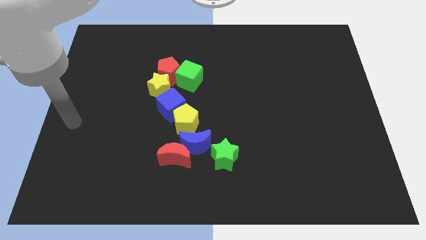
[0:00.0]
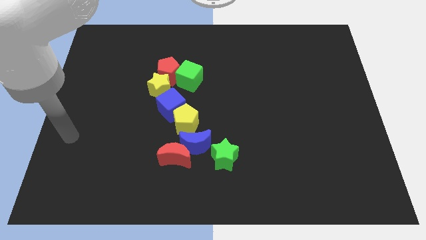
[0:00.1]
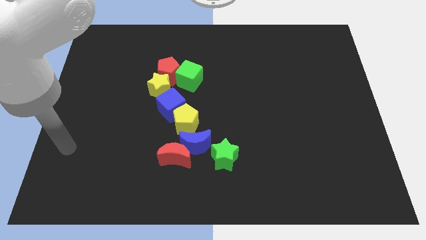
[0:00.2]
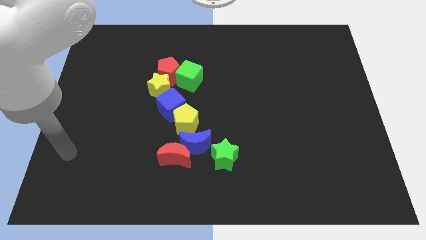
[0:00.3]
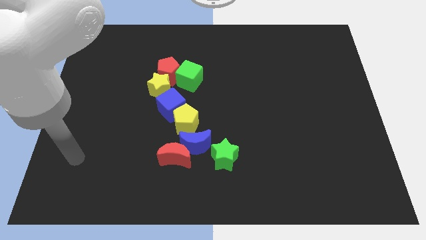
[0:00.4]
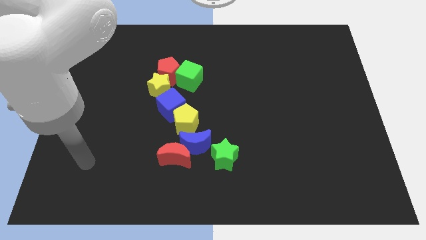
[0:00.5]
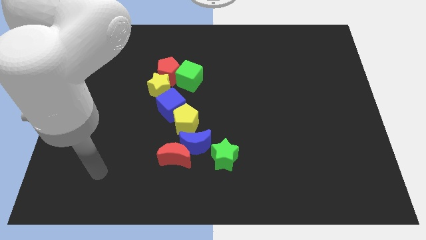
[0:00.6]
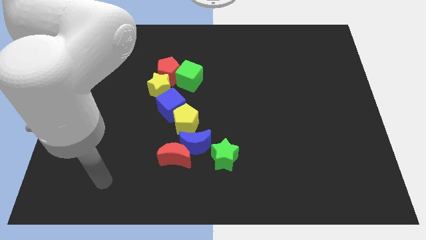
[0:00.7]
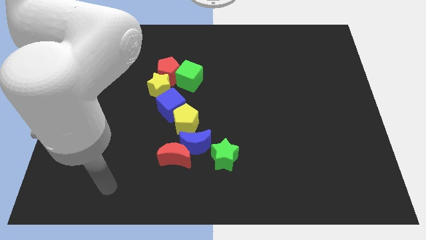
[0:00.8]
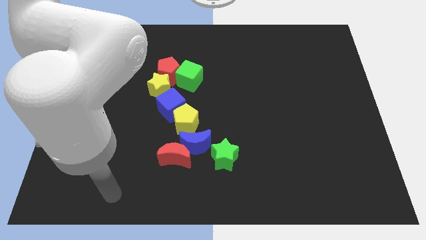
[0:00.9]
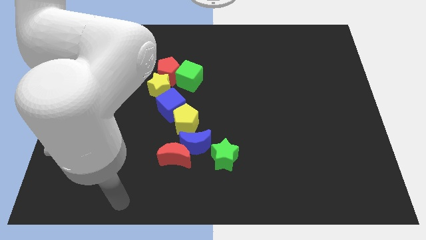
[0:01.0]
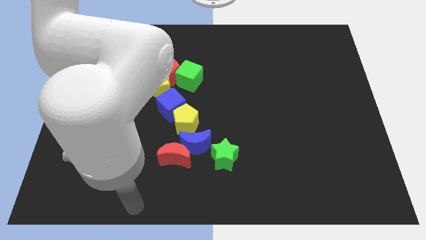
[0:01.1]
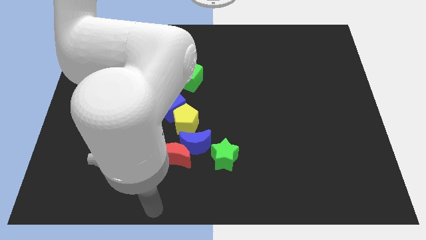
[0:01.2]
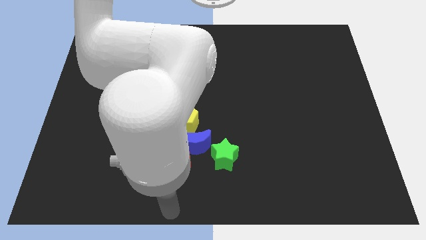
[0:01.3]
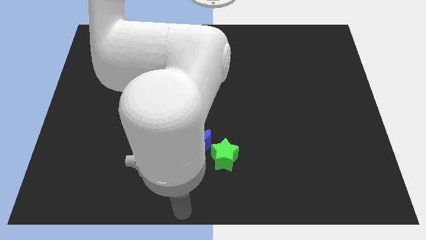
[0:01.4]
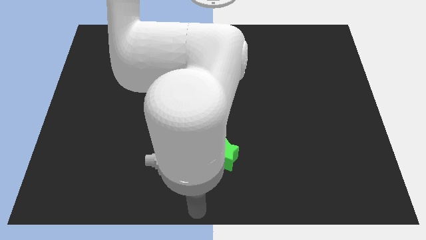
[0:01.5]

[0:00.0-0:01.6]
move your arm towards the bottom center of the board

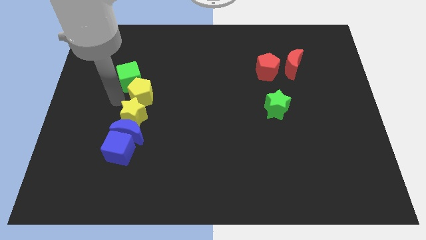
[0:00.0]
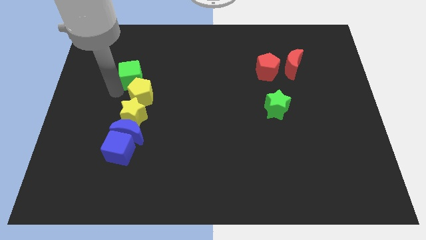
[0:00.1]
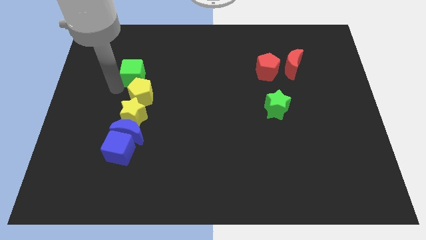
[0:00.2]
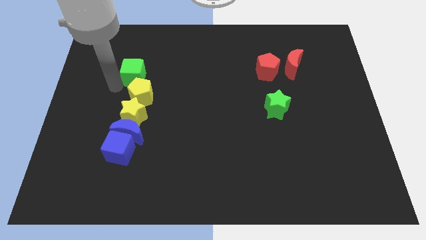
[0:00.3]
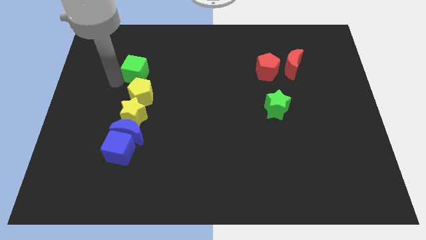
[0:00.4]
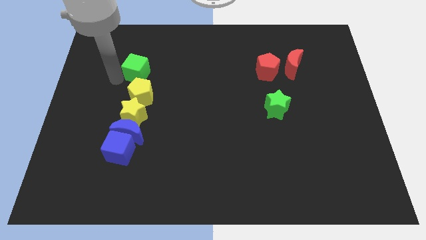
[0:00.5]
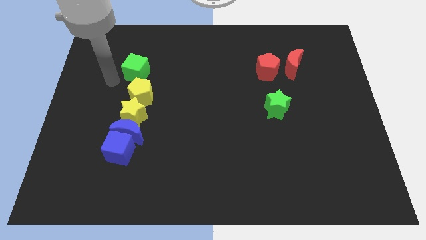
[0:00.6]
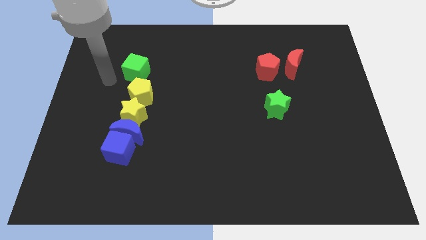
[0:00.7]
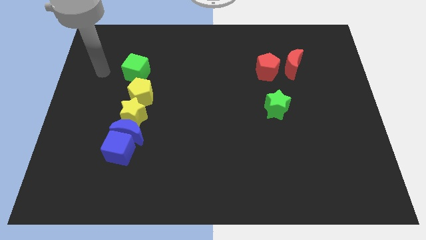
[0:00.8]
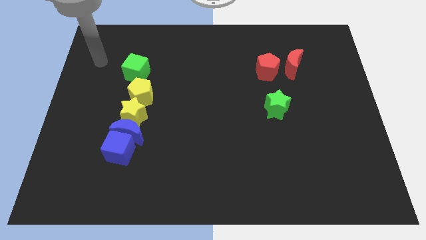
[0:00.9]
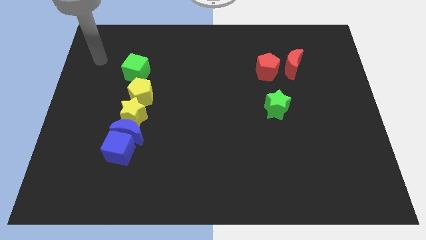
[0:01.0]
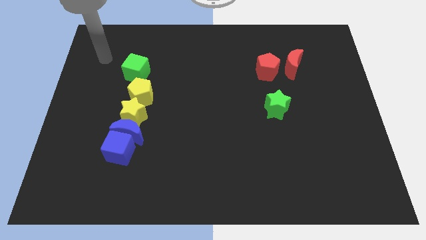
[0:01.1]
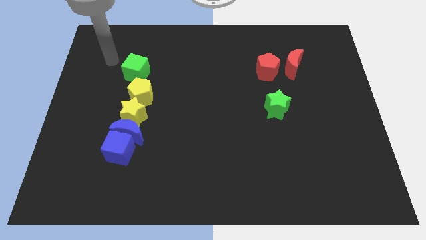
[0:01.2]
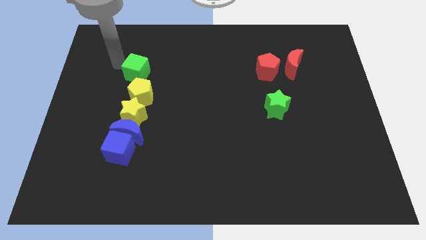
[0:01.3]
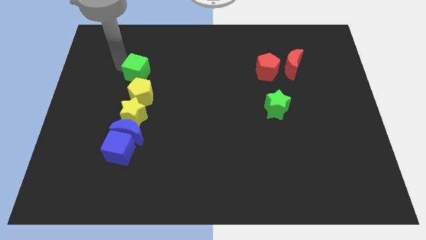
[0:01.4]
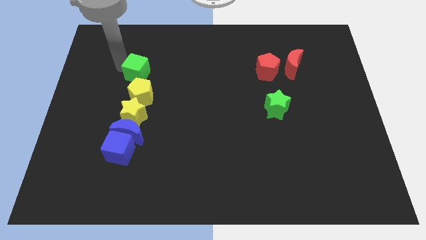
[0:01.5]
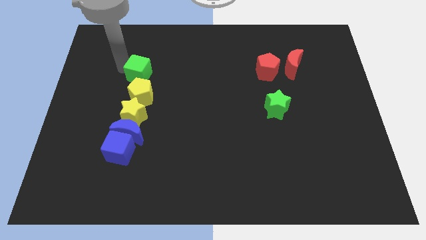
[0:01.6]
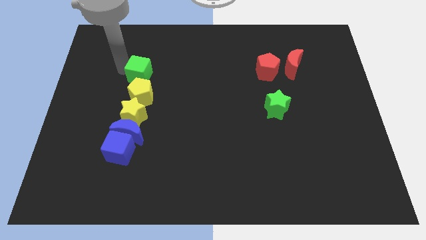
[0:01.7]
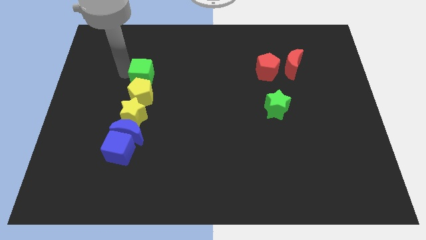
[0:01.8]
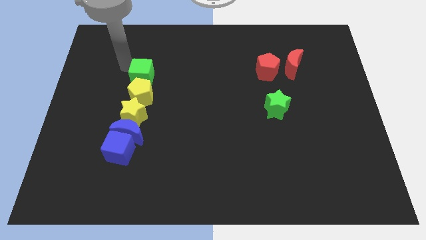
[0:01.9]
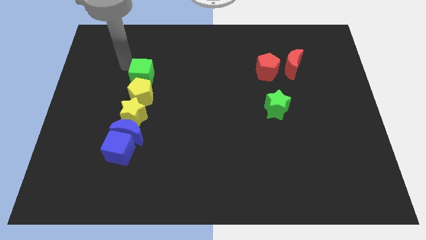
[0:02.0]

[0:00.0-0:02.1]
adjust the green cube towards the top of yellow star

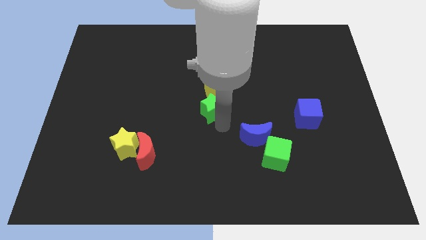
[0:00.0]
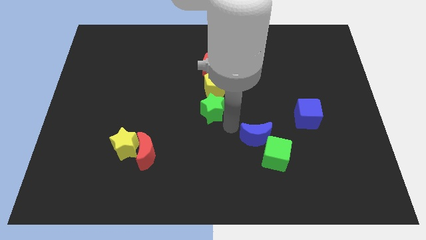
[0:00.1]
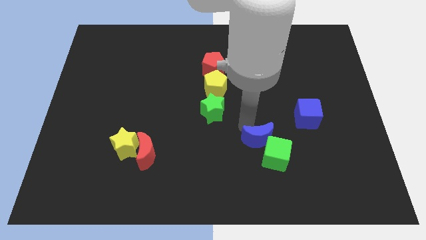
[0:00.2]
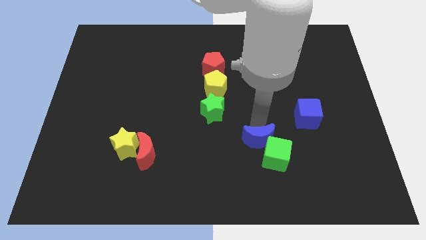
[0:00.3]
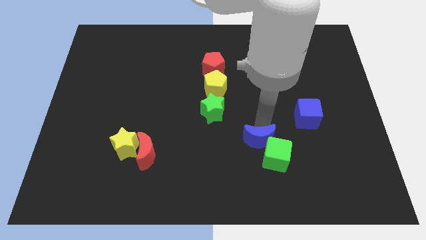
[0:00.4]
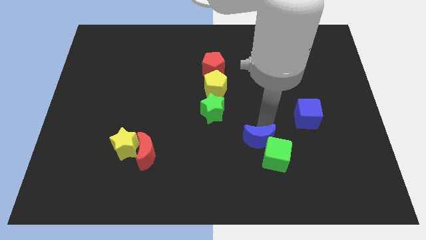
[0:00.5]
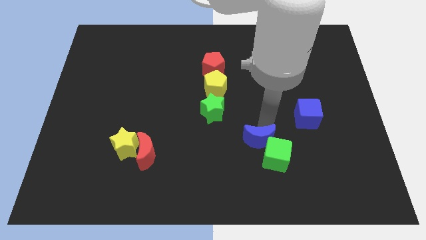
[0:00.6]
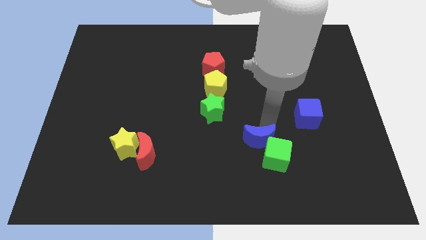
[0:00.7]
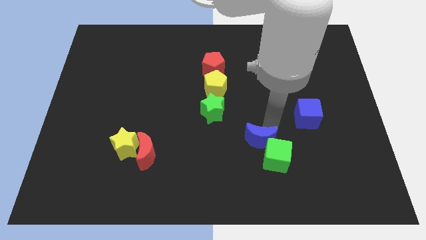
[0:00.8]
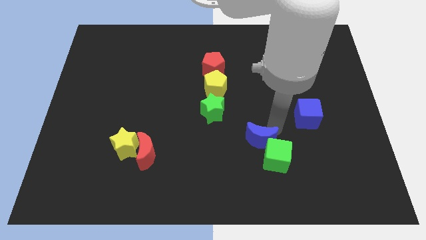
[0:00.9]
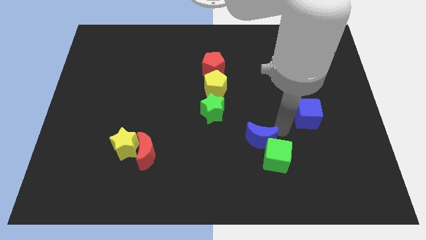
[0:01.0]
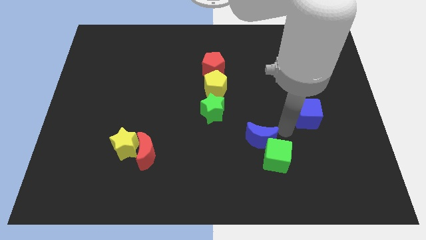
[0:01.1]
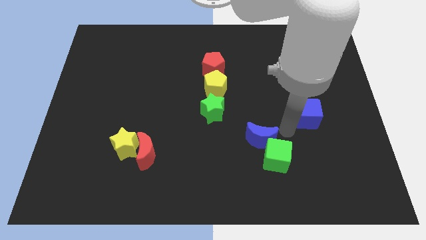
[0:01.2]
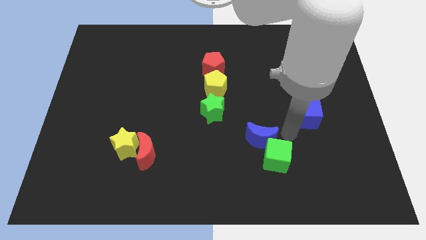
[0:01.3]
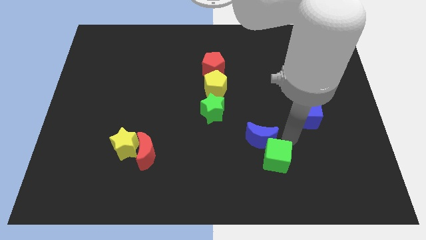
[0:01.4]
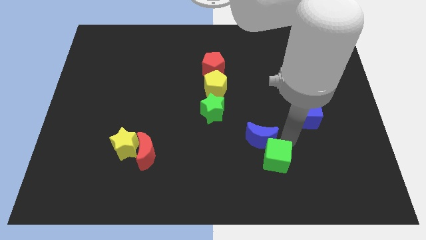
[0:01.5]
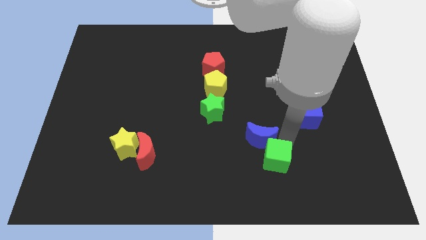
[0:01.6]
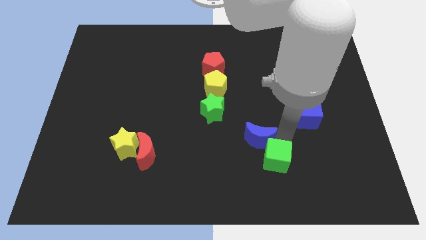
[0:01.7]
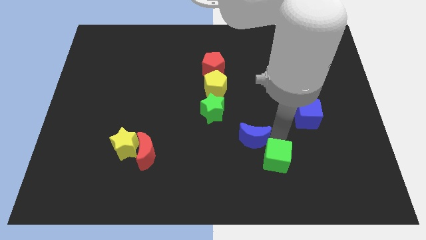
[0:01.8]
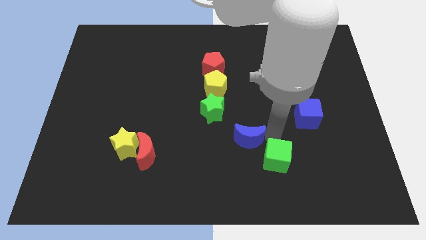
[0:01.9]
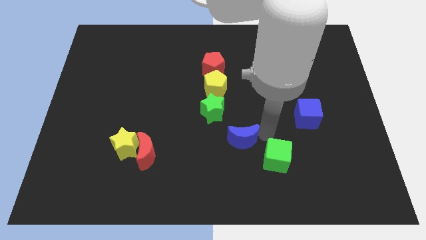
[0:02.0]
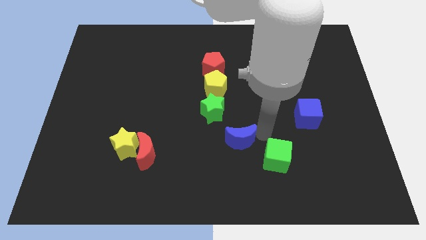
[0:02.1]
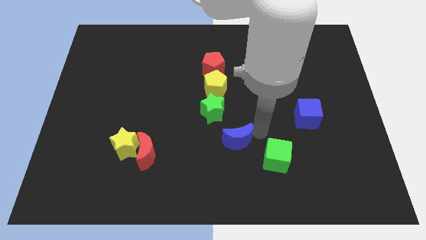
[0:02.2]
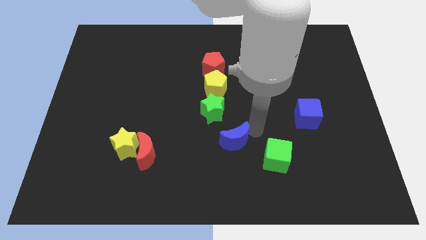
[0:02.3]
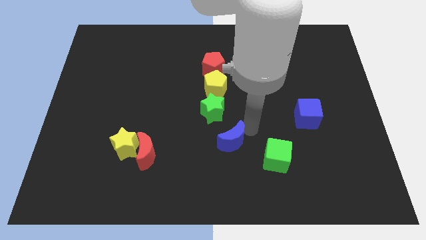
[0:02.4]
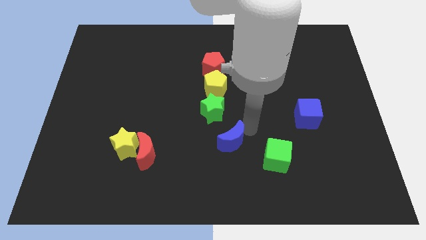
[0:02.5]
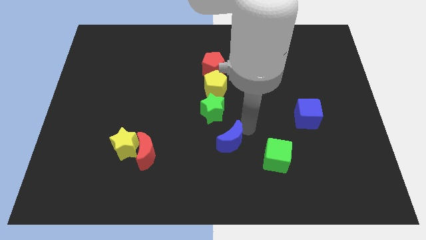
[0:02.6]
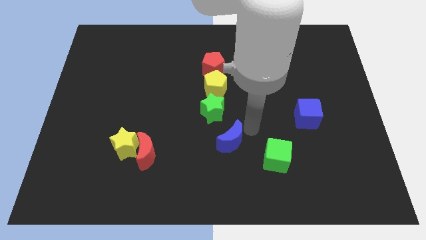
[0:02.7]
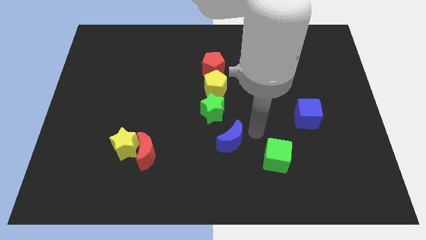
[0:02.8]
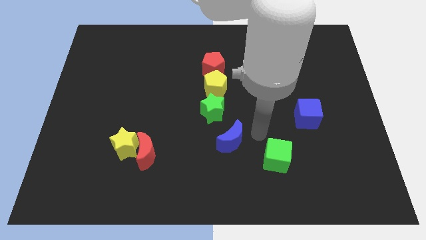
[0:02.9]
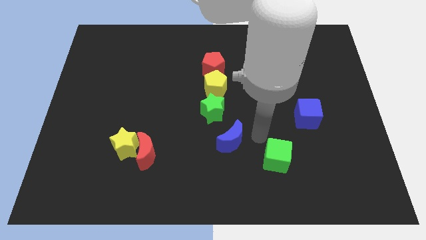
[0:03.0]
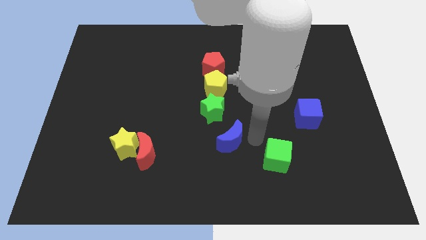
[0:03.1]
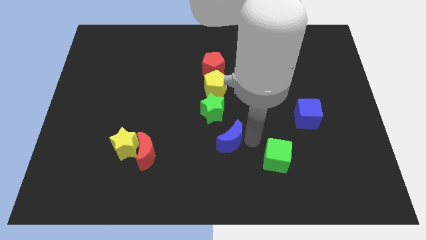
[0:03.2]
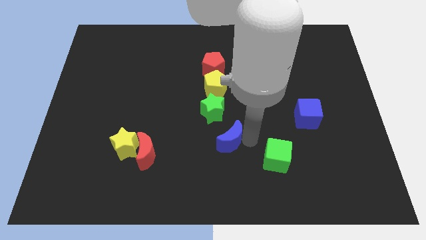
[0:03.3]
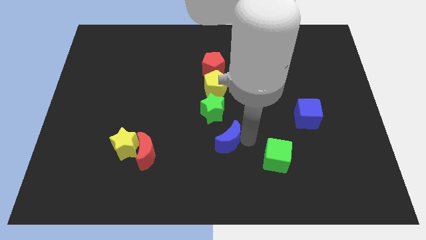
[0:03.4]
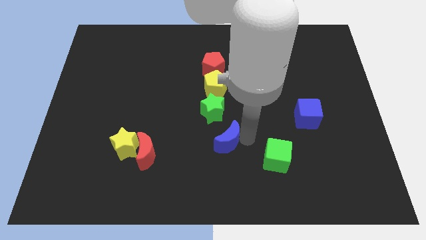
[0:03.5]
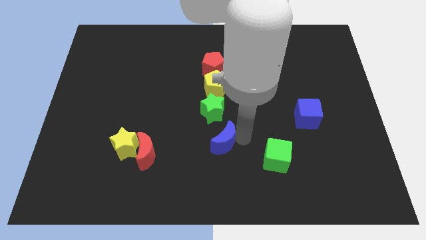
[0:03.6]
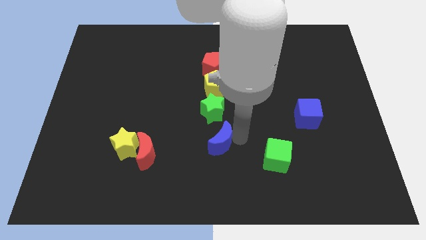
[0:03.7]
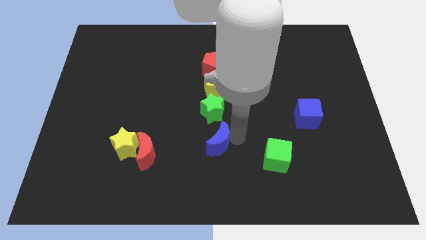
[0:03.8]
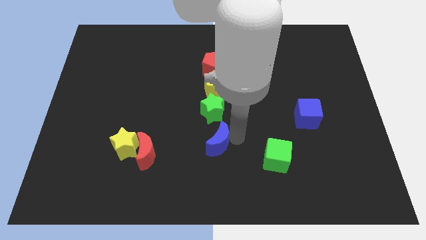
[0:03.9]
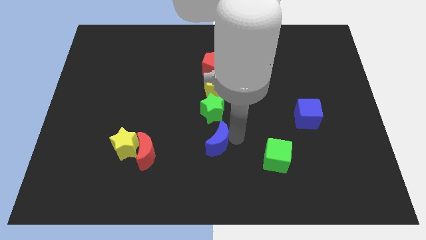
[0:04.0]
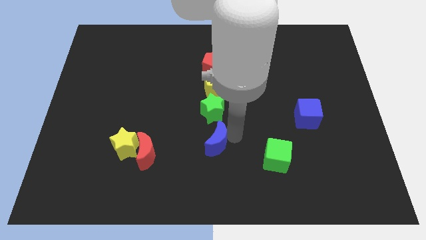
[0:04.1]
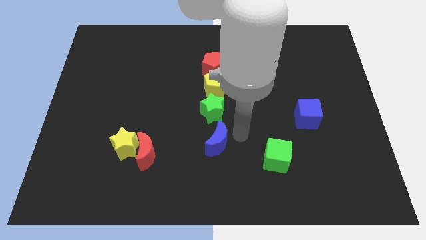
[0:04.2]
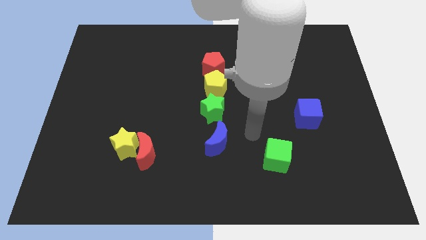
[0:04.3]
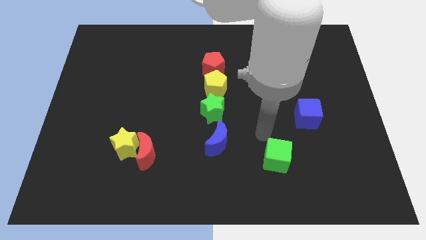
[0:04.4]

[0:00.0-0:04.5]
push the blue moon to the bottom of blocks to form vertical line

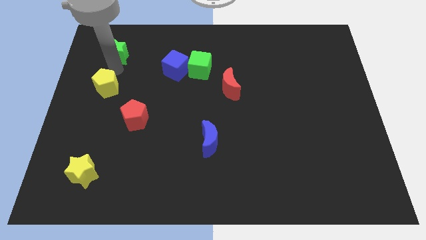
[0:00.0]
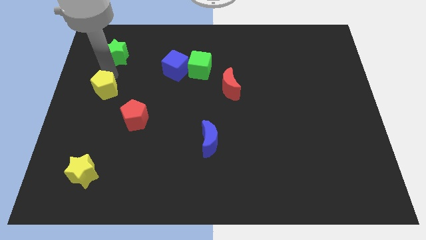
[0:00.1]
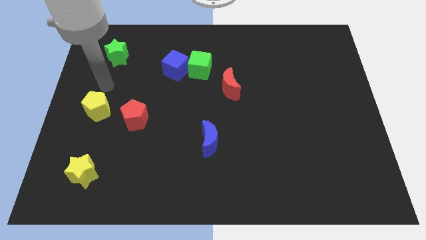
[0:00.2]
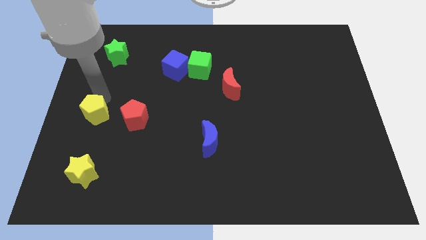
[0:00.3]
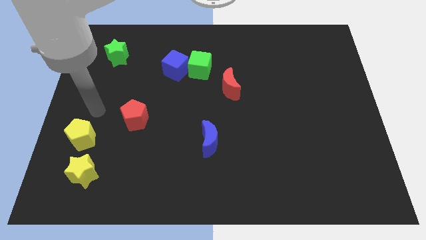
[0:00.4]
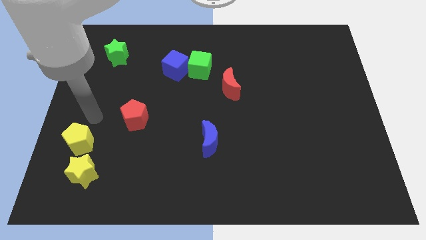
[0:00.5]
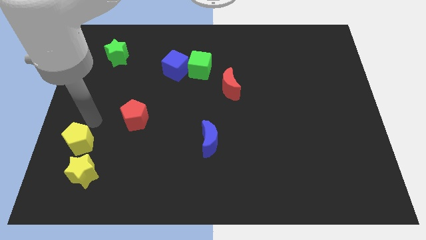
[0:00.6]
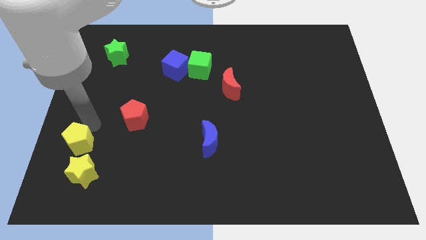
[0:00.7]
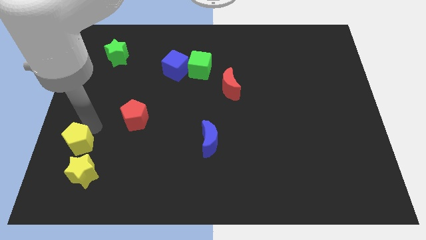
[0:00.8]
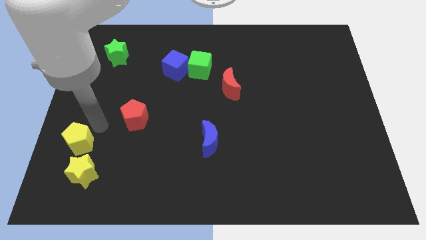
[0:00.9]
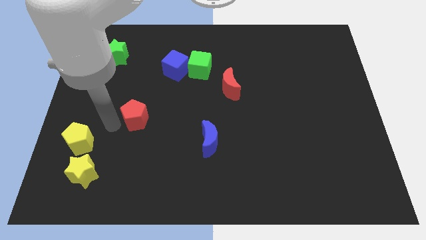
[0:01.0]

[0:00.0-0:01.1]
push yellow pentagon into the yellow star
